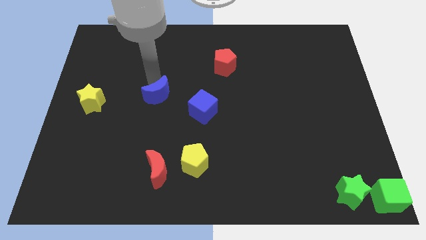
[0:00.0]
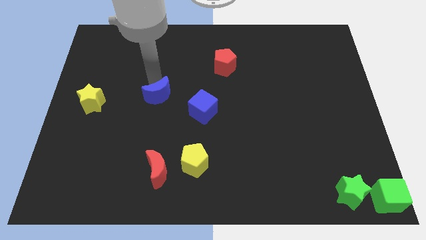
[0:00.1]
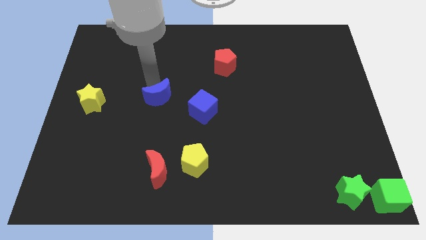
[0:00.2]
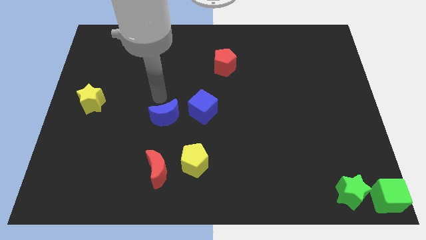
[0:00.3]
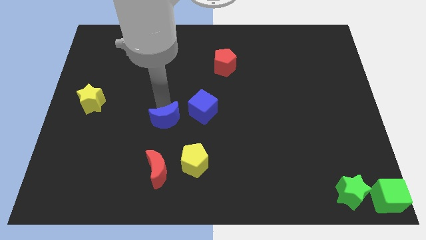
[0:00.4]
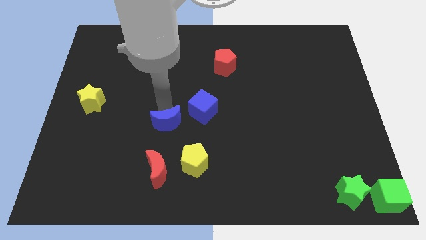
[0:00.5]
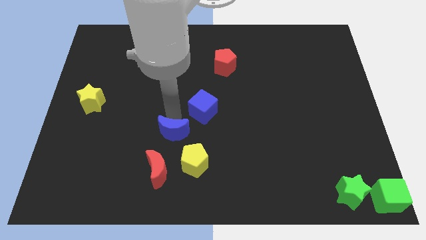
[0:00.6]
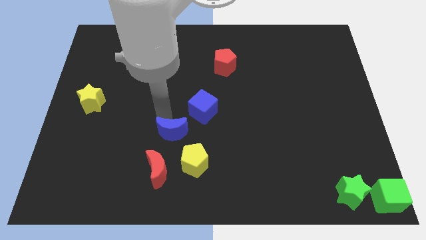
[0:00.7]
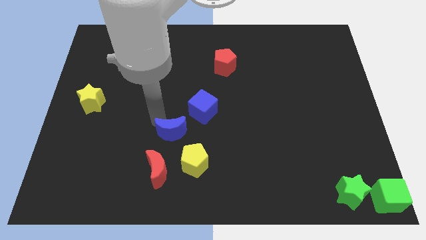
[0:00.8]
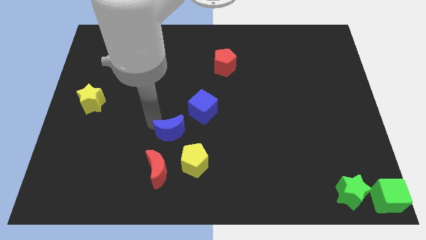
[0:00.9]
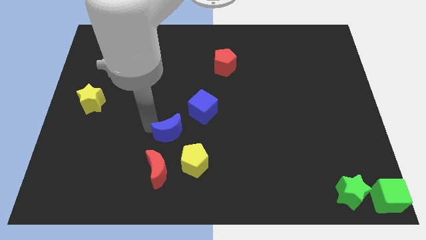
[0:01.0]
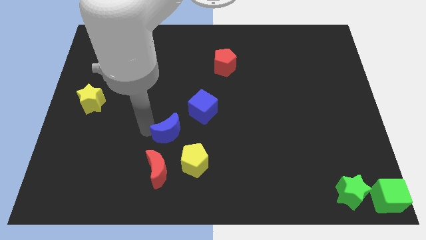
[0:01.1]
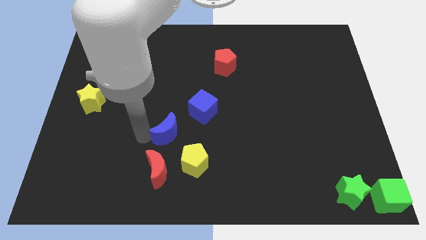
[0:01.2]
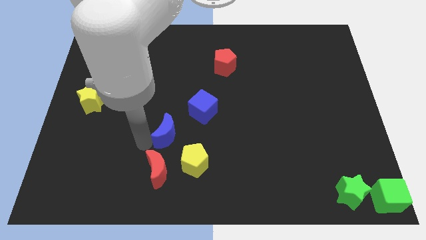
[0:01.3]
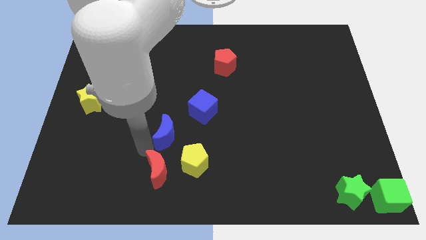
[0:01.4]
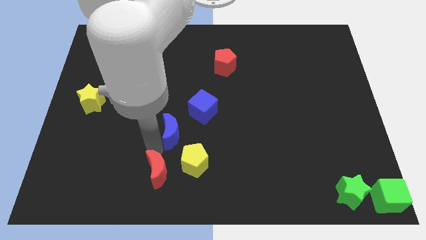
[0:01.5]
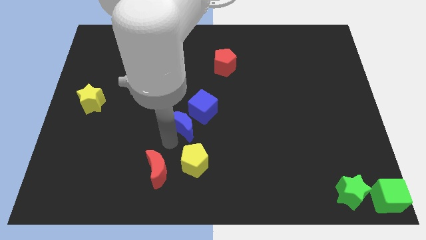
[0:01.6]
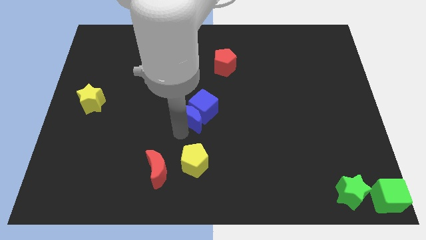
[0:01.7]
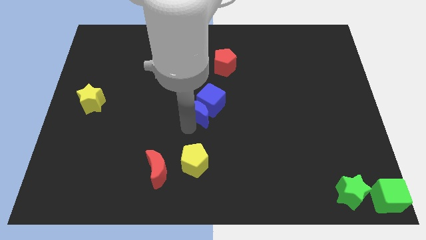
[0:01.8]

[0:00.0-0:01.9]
push the blue moon into the blue cube

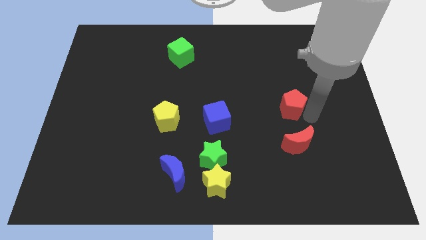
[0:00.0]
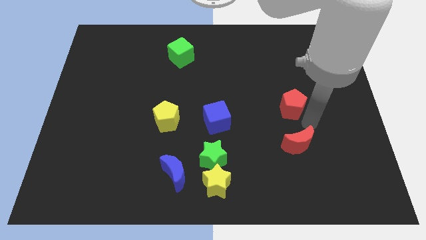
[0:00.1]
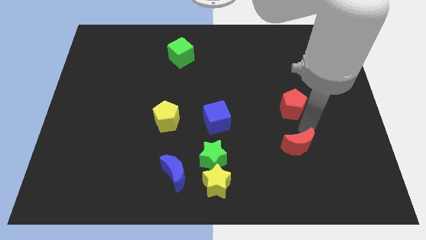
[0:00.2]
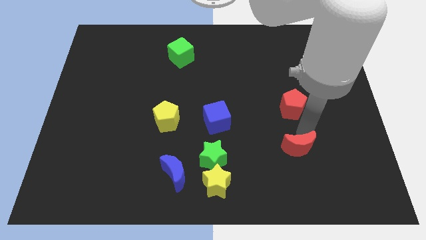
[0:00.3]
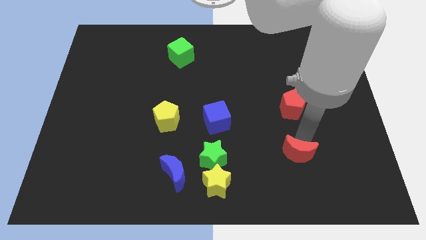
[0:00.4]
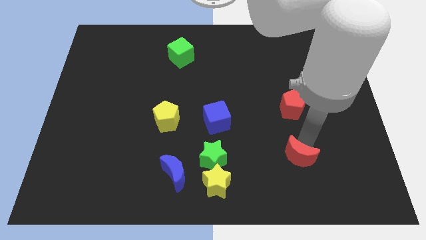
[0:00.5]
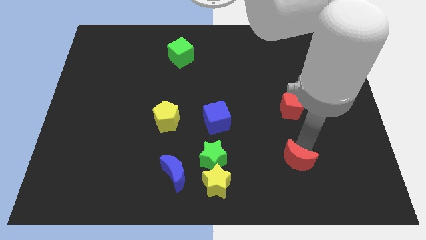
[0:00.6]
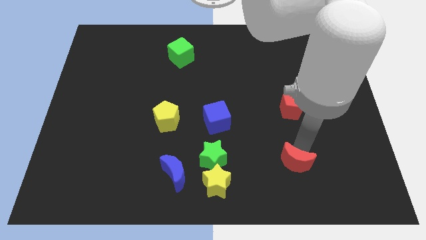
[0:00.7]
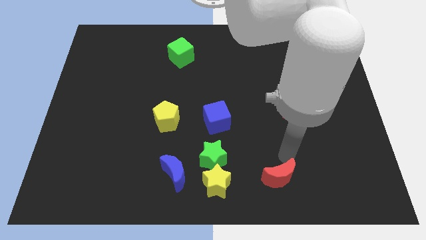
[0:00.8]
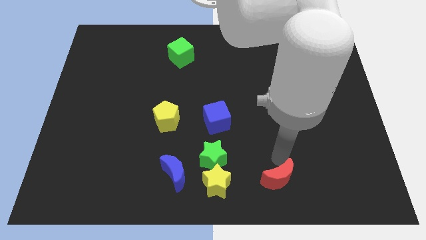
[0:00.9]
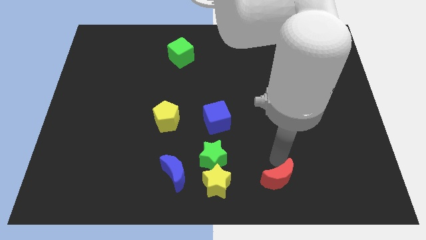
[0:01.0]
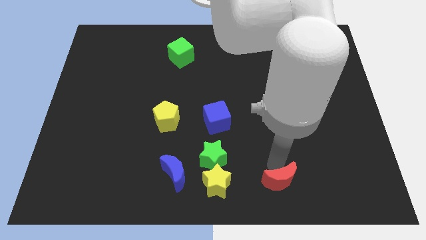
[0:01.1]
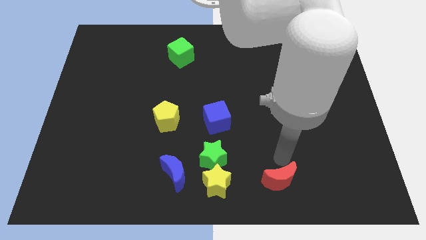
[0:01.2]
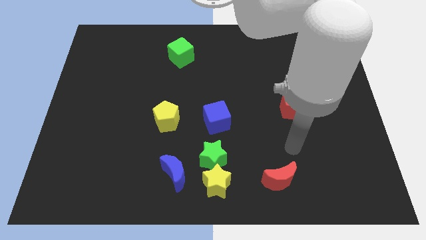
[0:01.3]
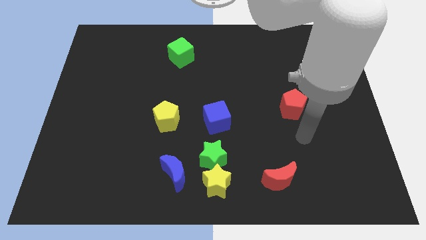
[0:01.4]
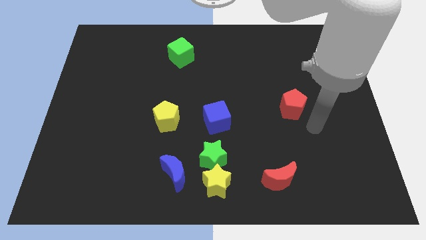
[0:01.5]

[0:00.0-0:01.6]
push the red moon to the right of yellow star

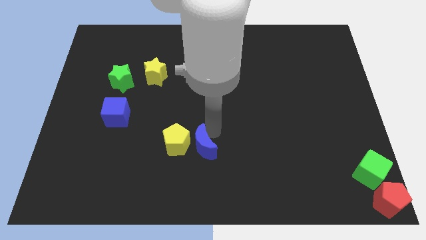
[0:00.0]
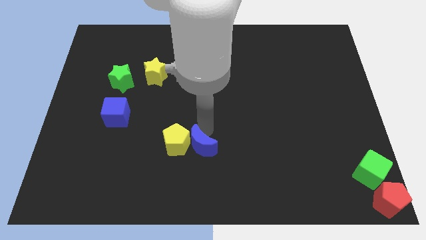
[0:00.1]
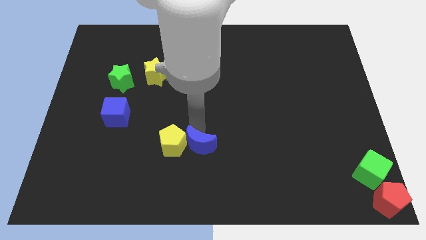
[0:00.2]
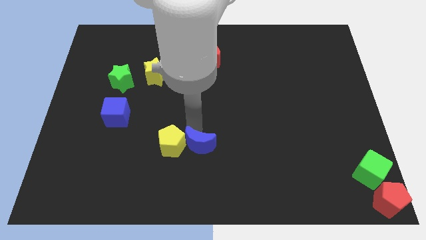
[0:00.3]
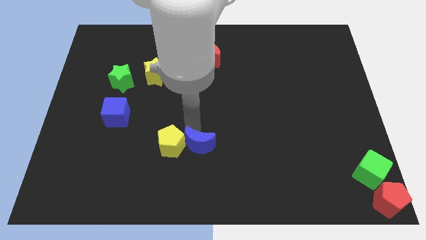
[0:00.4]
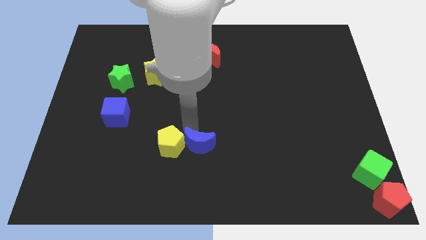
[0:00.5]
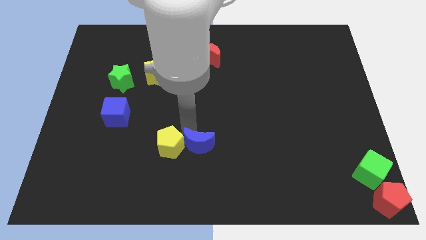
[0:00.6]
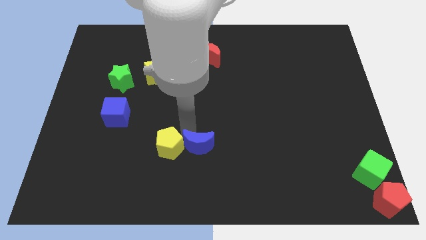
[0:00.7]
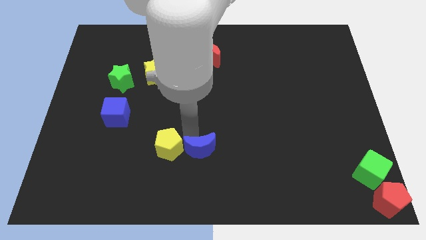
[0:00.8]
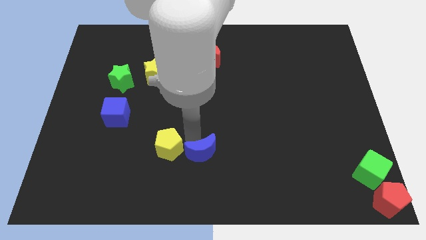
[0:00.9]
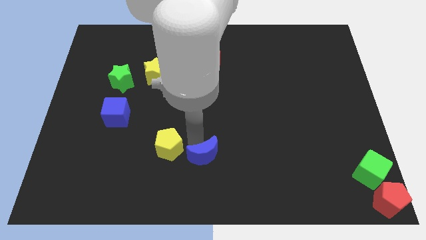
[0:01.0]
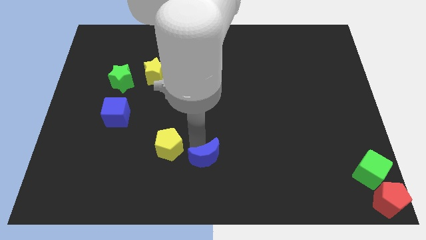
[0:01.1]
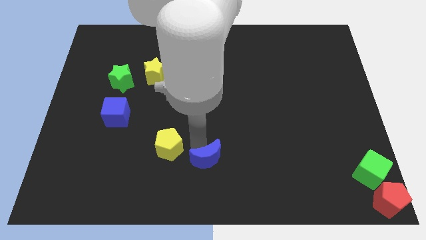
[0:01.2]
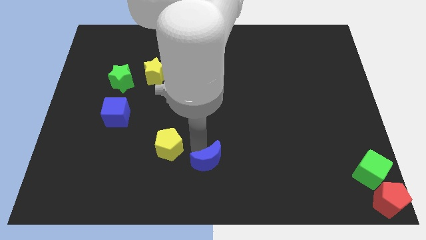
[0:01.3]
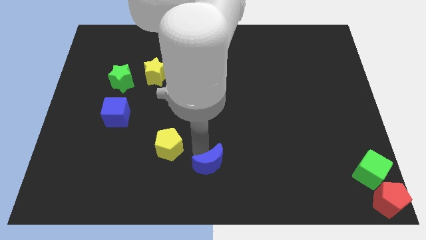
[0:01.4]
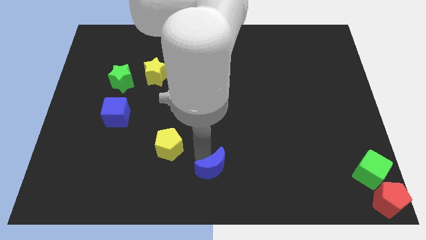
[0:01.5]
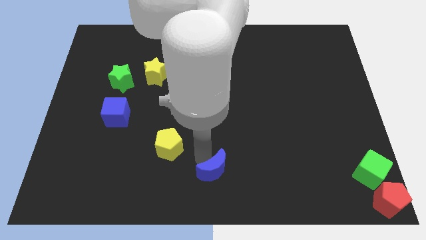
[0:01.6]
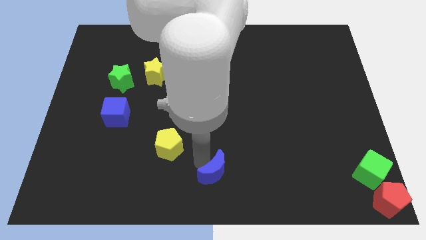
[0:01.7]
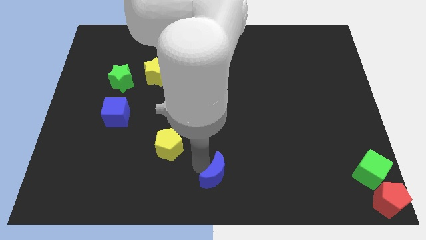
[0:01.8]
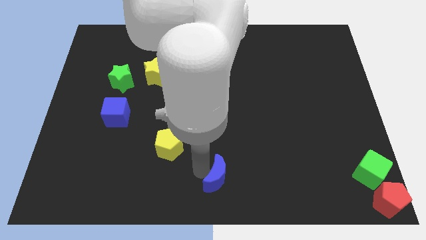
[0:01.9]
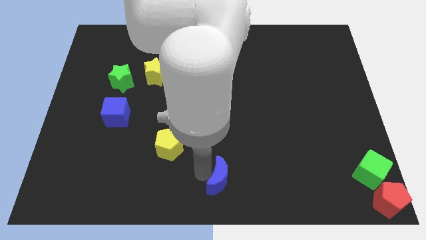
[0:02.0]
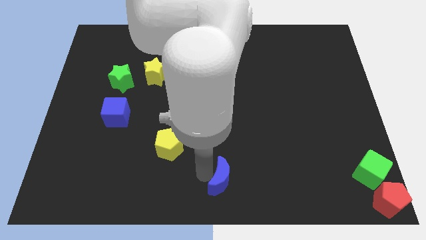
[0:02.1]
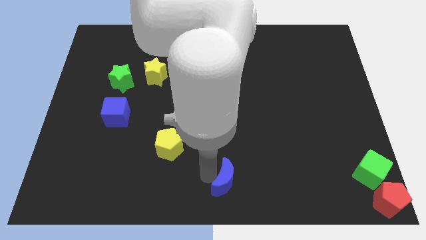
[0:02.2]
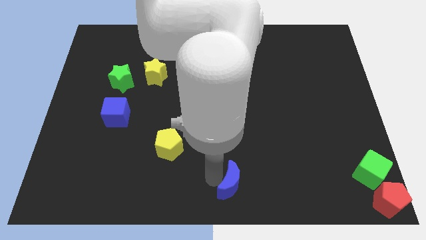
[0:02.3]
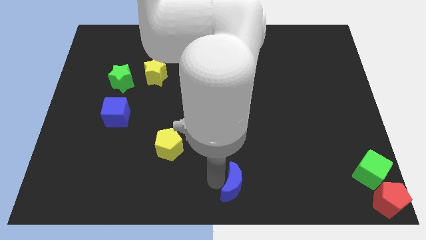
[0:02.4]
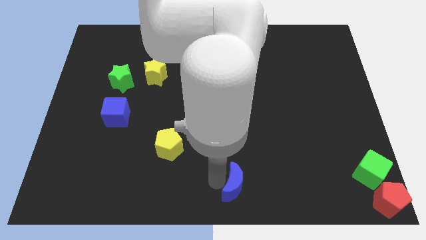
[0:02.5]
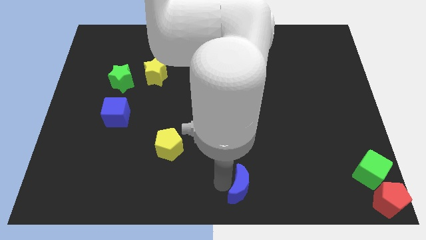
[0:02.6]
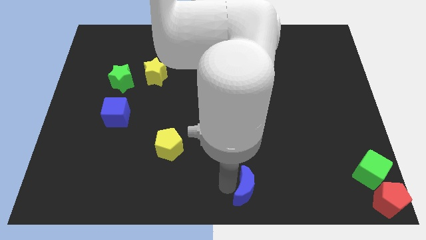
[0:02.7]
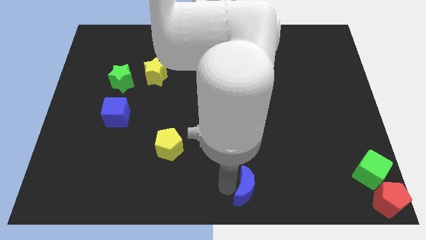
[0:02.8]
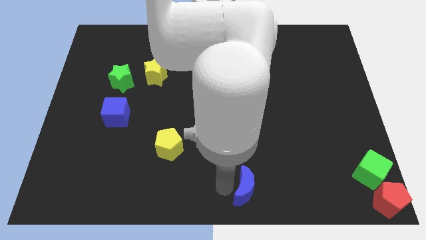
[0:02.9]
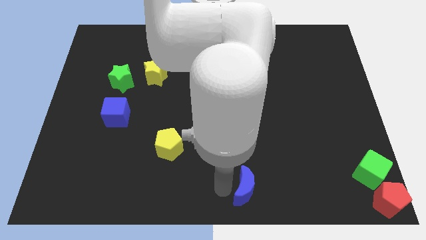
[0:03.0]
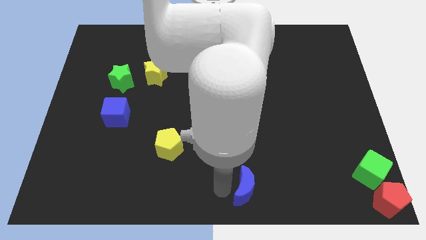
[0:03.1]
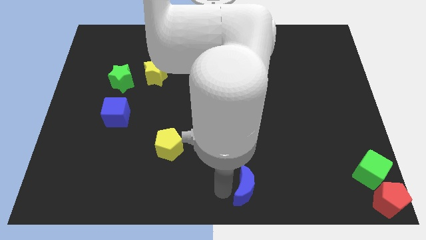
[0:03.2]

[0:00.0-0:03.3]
move the blue crescent to the bottom center of the board

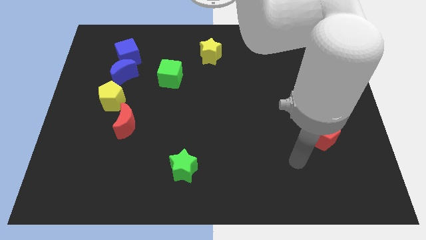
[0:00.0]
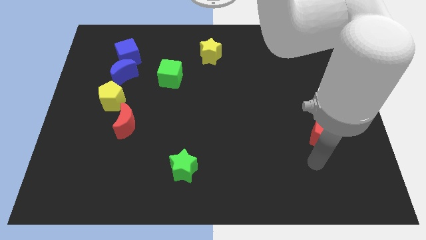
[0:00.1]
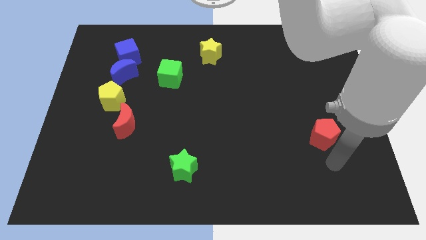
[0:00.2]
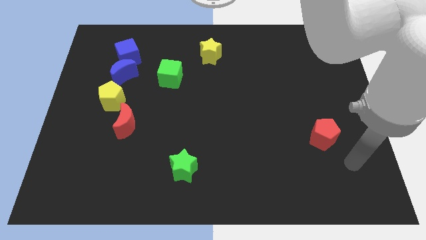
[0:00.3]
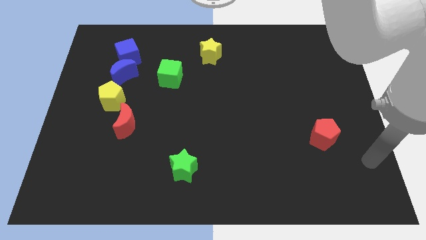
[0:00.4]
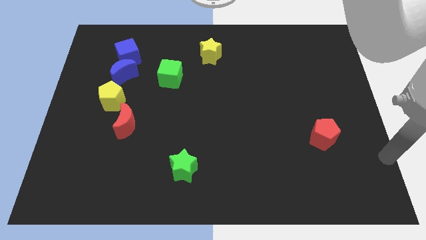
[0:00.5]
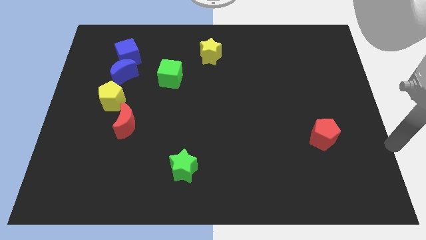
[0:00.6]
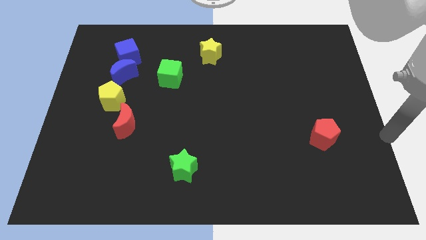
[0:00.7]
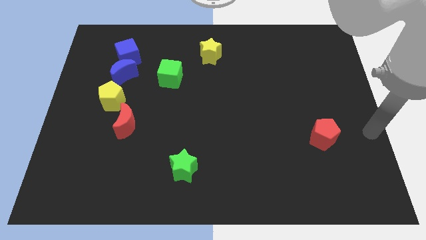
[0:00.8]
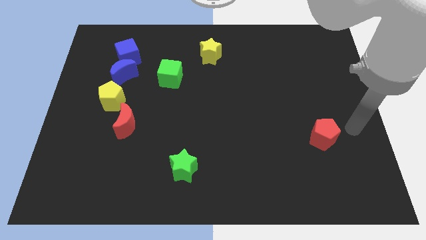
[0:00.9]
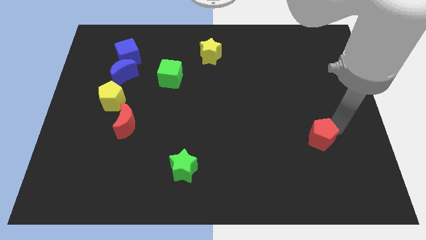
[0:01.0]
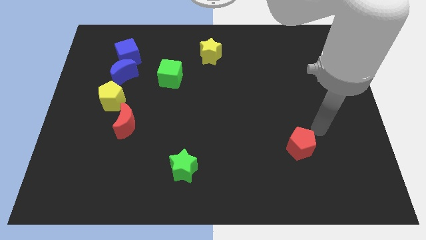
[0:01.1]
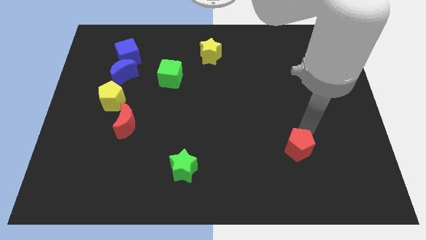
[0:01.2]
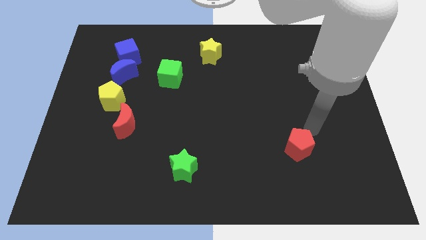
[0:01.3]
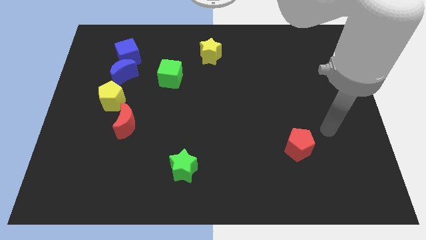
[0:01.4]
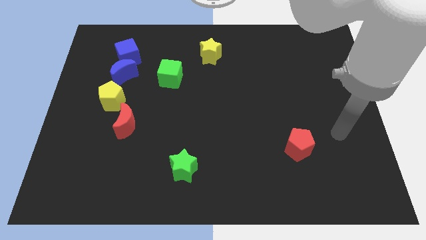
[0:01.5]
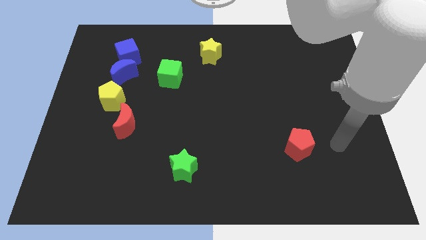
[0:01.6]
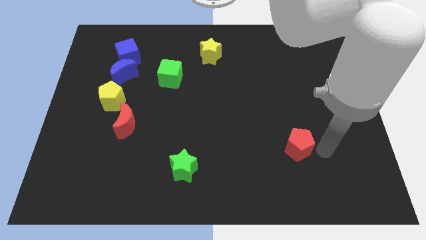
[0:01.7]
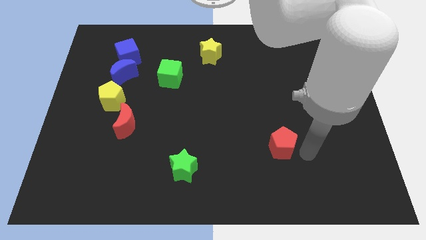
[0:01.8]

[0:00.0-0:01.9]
drag the red pentagon towards the green star

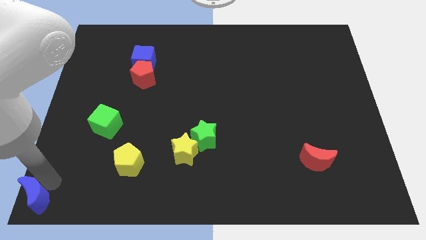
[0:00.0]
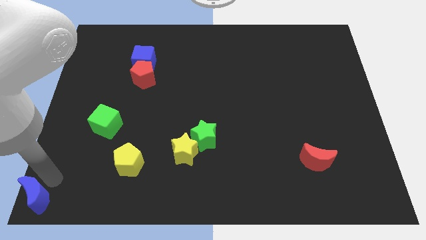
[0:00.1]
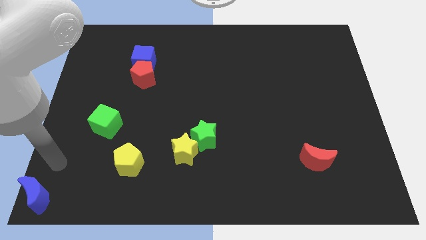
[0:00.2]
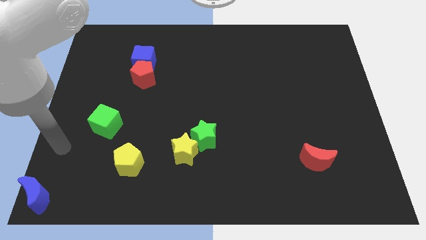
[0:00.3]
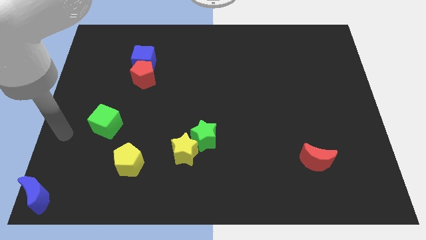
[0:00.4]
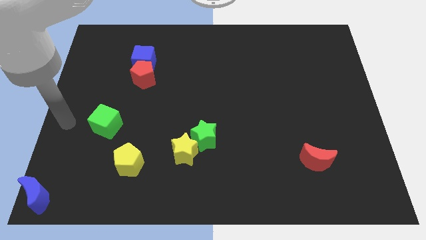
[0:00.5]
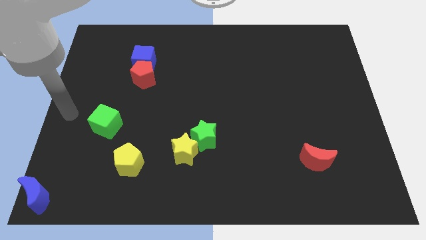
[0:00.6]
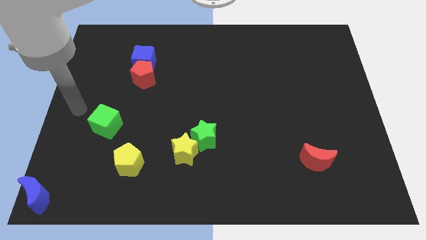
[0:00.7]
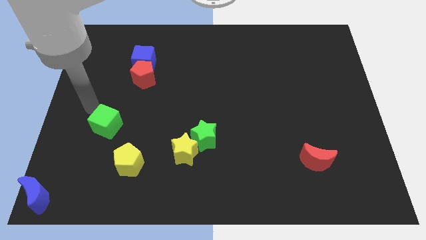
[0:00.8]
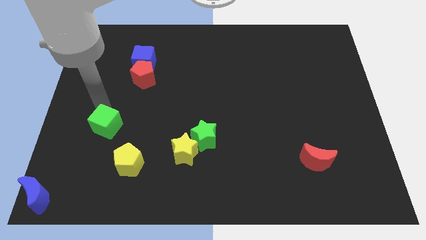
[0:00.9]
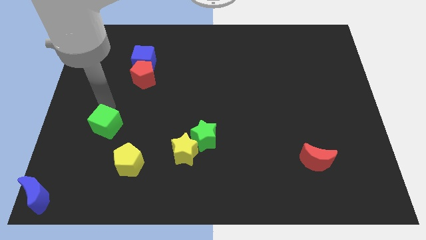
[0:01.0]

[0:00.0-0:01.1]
place arm on the top of green cube
